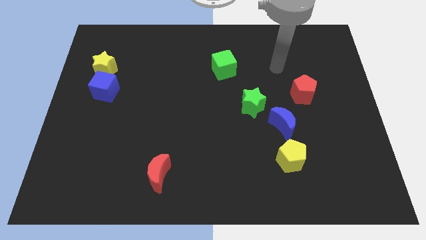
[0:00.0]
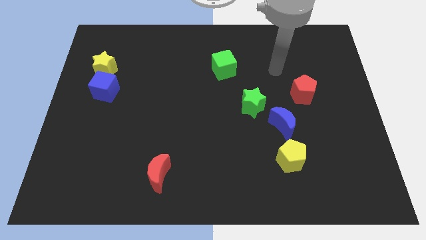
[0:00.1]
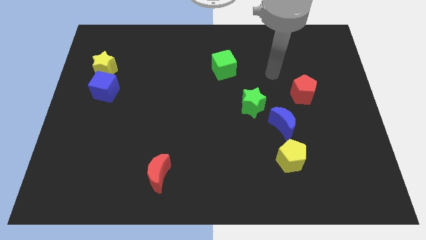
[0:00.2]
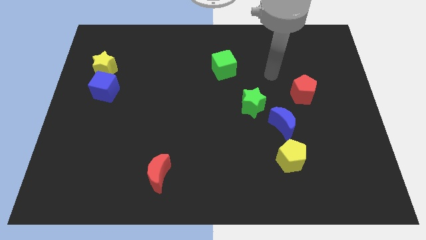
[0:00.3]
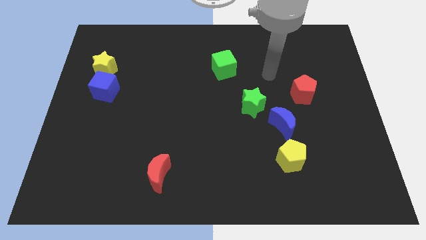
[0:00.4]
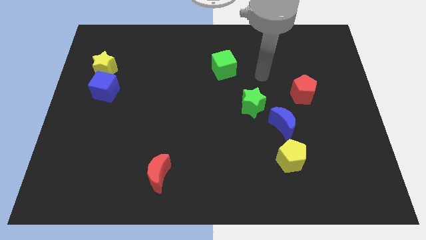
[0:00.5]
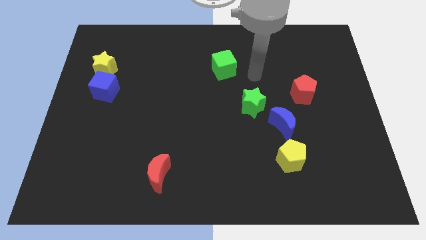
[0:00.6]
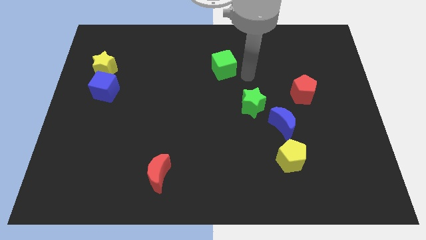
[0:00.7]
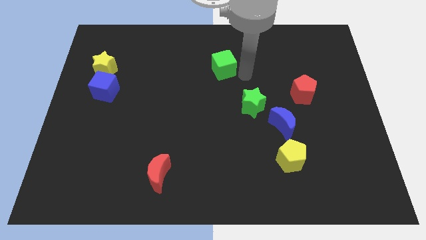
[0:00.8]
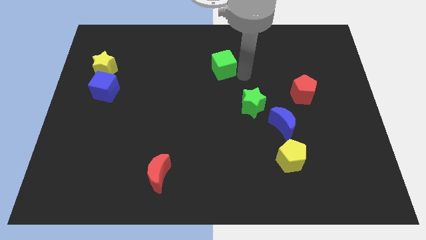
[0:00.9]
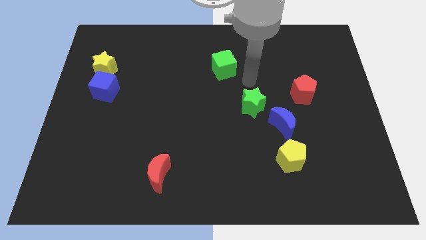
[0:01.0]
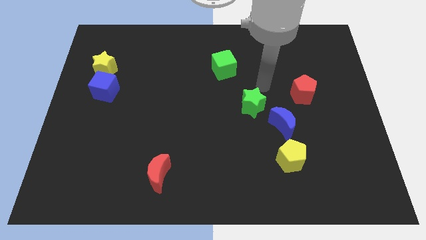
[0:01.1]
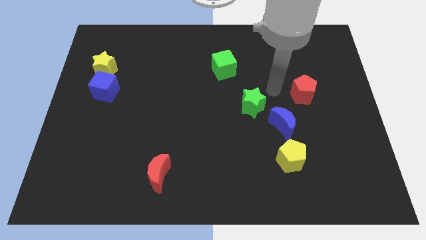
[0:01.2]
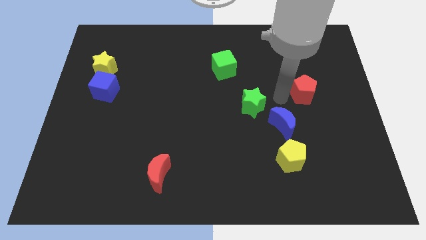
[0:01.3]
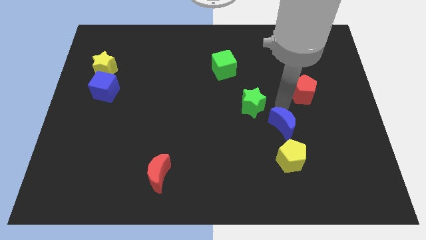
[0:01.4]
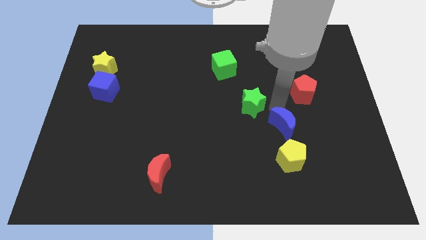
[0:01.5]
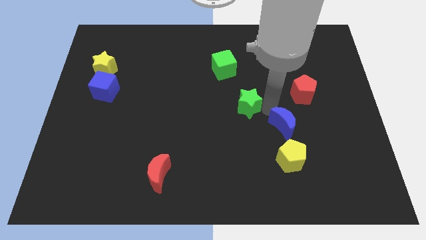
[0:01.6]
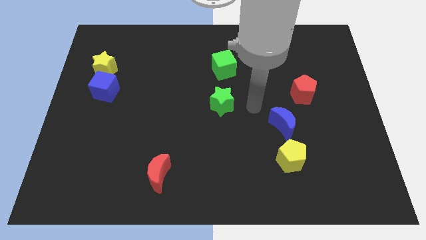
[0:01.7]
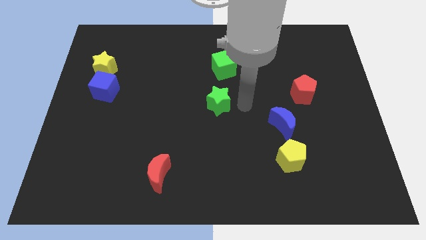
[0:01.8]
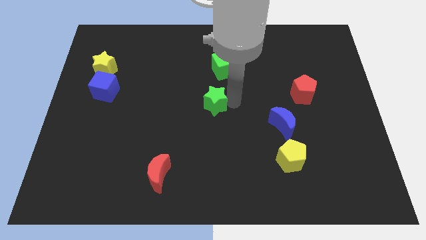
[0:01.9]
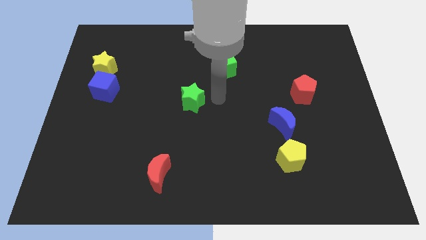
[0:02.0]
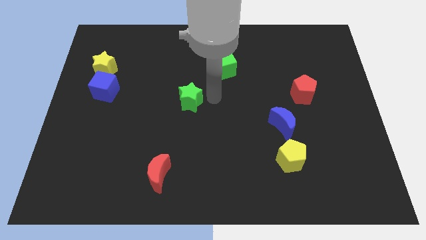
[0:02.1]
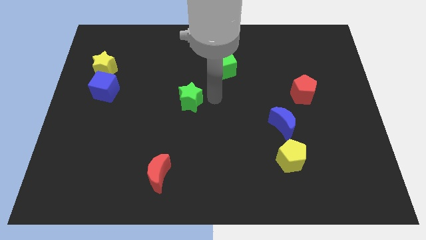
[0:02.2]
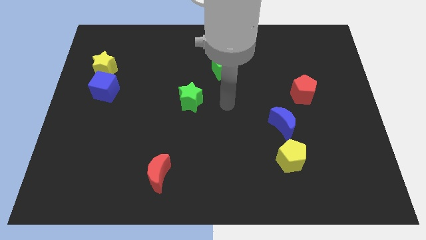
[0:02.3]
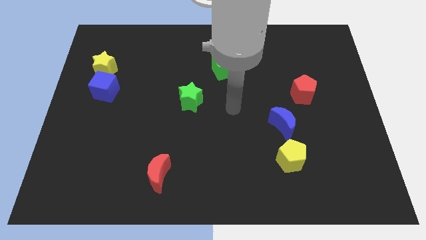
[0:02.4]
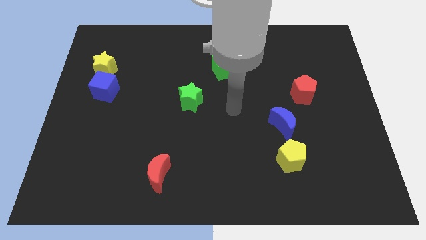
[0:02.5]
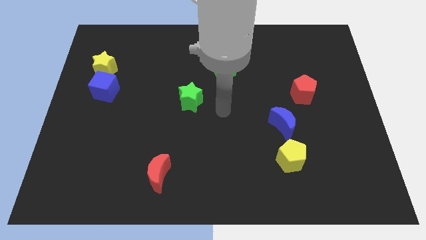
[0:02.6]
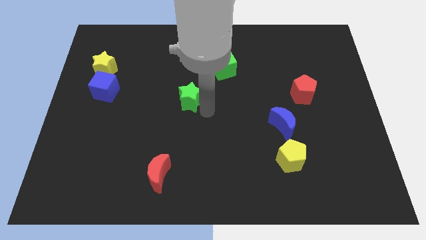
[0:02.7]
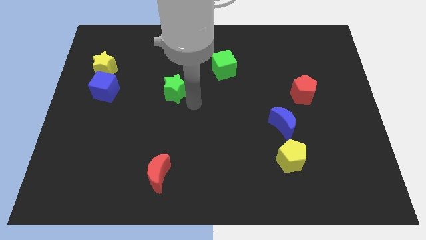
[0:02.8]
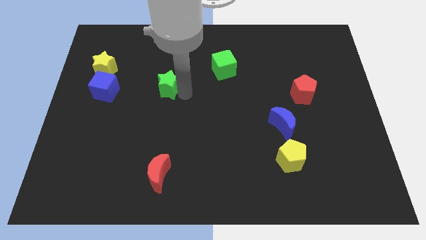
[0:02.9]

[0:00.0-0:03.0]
move the green star horizontally right to the blue cube

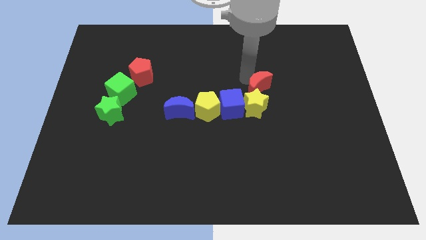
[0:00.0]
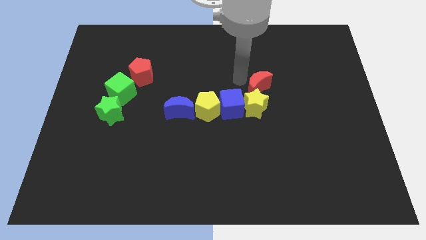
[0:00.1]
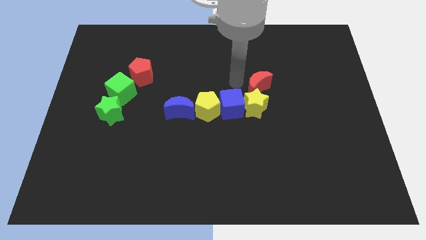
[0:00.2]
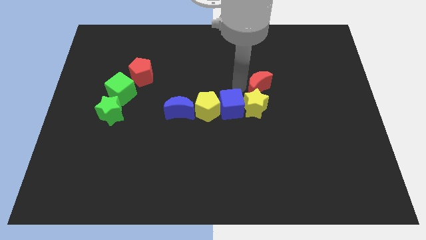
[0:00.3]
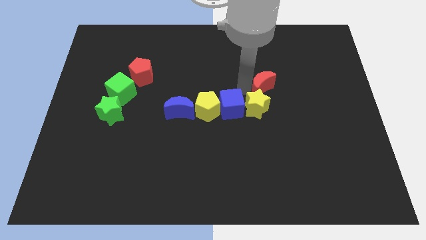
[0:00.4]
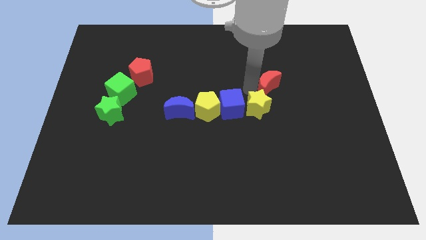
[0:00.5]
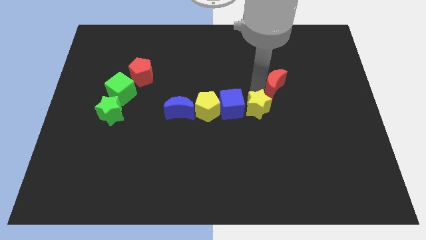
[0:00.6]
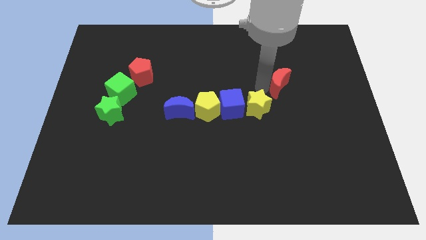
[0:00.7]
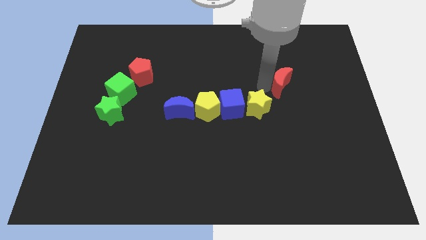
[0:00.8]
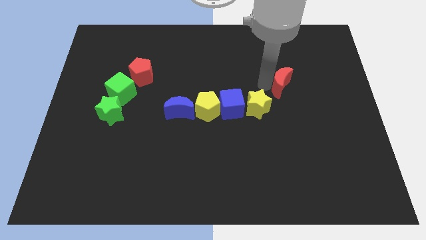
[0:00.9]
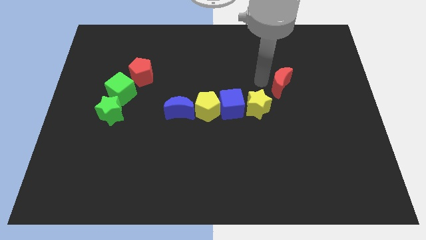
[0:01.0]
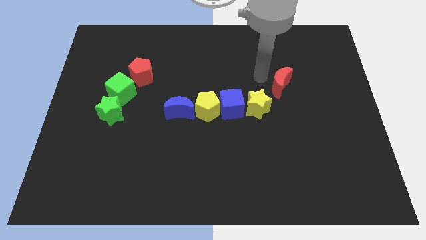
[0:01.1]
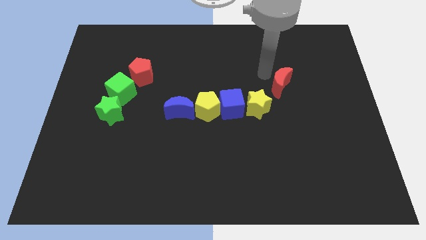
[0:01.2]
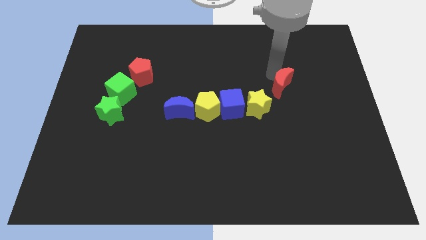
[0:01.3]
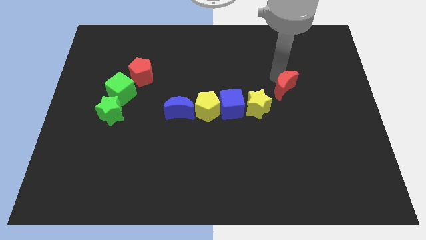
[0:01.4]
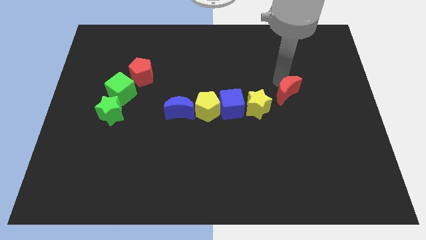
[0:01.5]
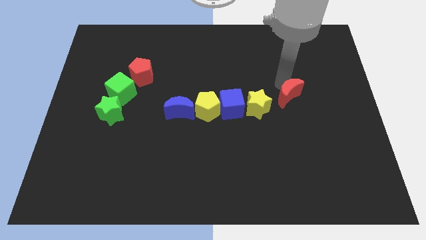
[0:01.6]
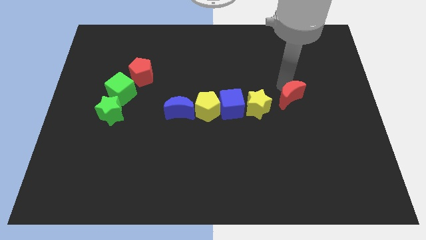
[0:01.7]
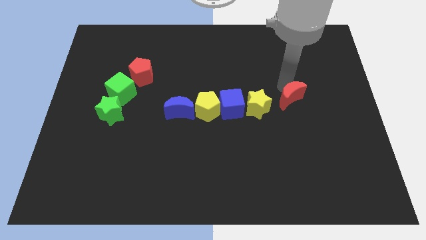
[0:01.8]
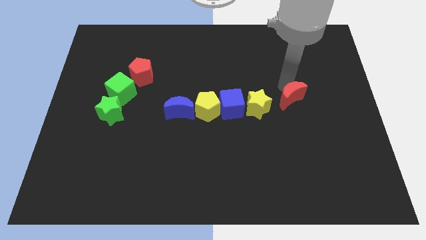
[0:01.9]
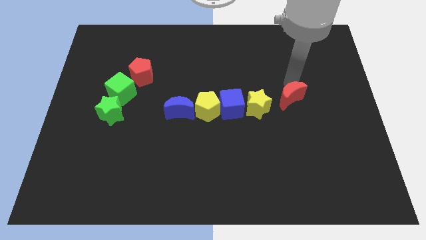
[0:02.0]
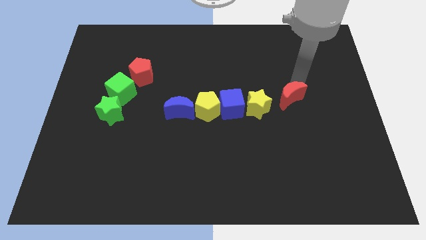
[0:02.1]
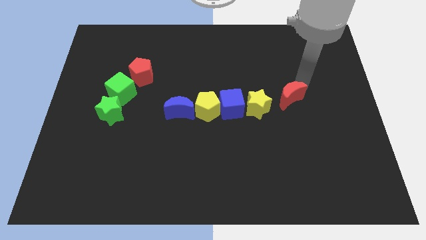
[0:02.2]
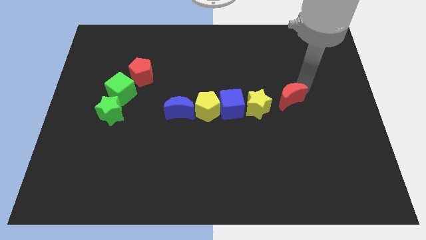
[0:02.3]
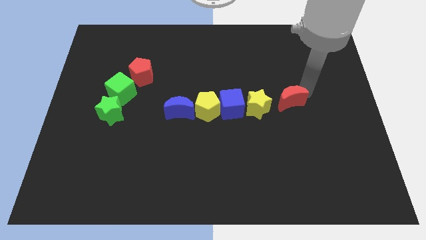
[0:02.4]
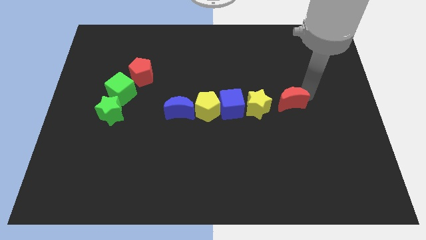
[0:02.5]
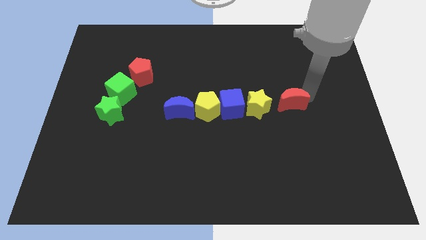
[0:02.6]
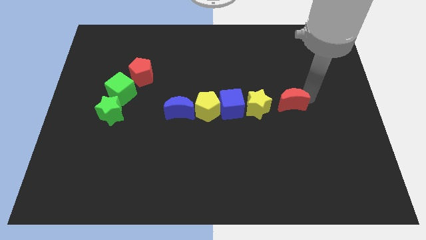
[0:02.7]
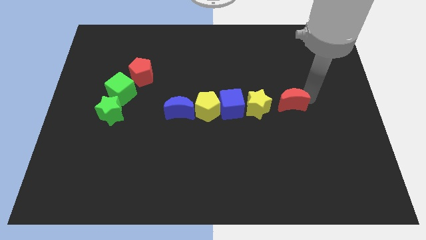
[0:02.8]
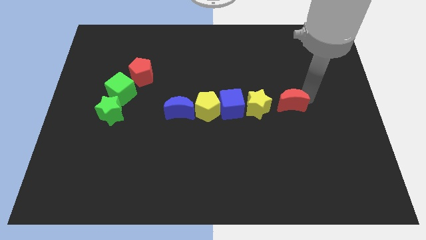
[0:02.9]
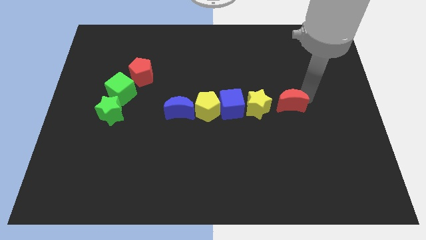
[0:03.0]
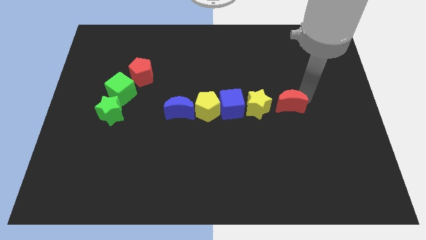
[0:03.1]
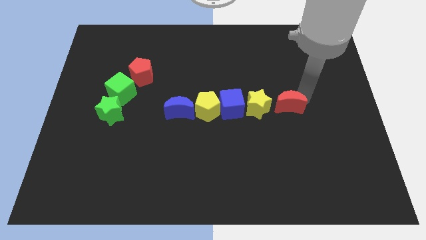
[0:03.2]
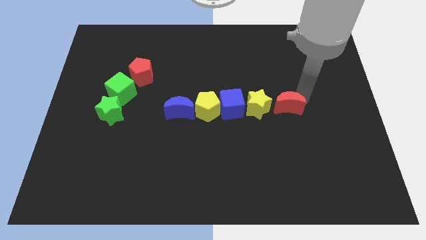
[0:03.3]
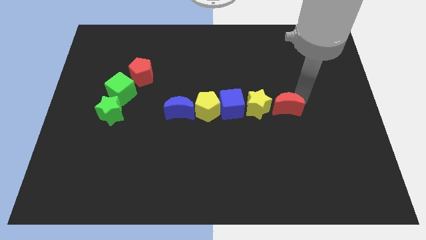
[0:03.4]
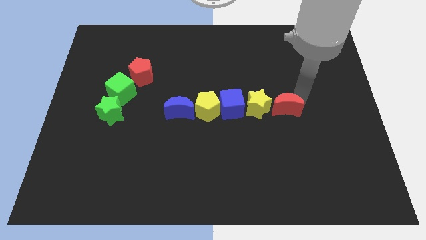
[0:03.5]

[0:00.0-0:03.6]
move red crescent to the right of yellow star

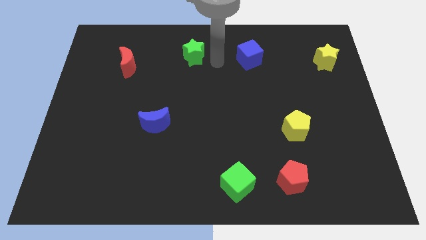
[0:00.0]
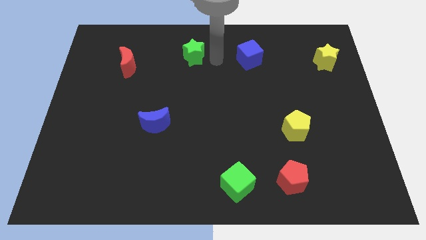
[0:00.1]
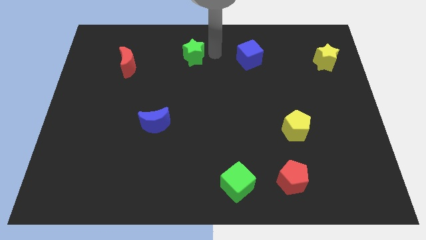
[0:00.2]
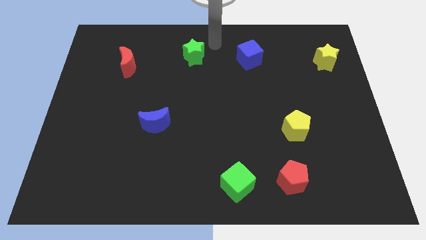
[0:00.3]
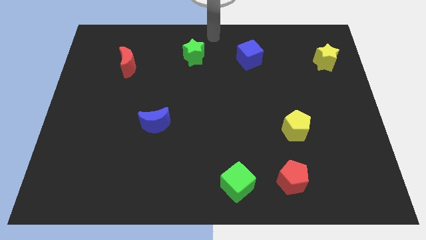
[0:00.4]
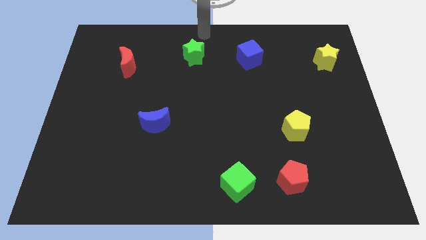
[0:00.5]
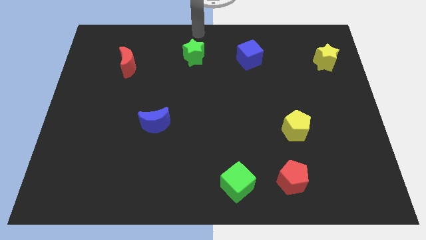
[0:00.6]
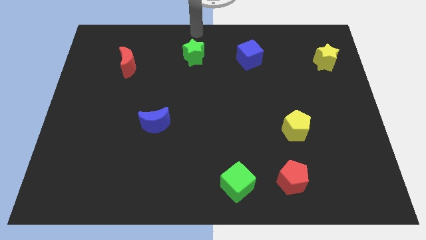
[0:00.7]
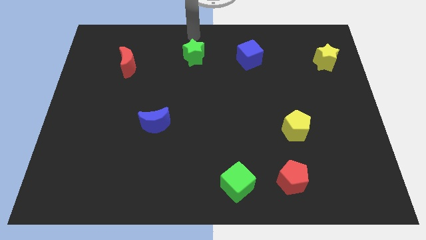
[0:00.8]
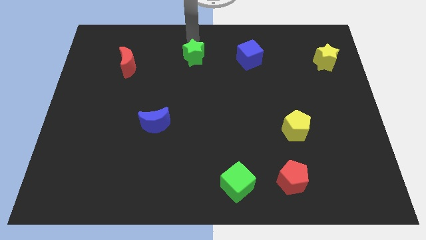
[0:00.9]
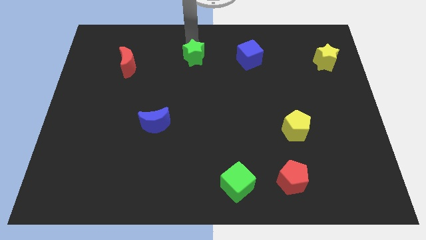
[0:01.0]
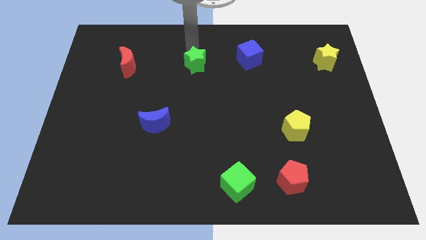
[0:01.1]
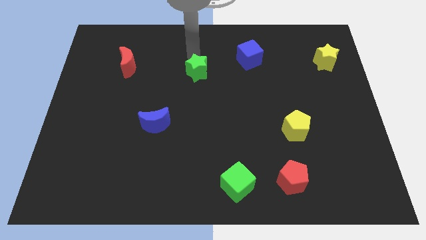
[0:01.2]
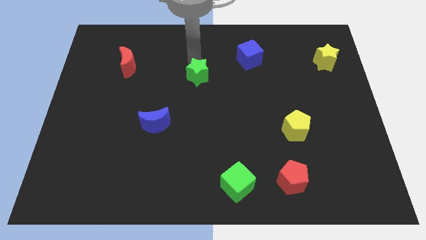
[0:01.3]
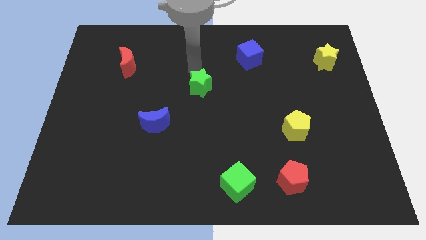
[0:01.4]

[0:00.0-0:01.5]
place the green star diagonally in between the blue cube and blue crescent

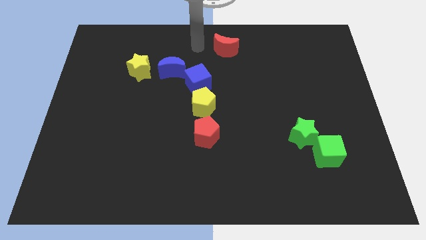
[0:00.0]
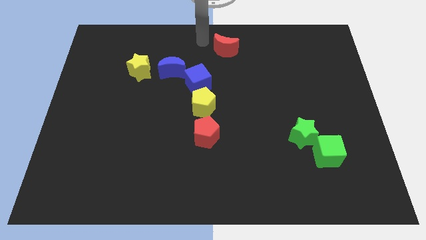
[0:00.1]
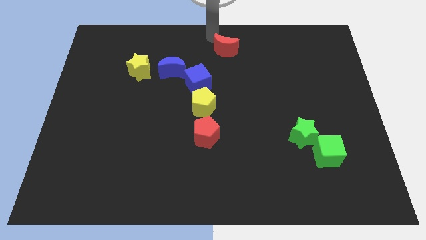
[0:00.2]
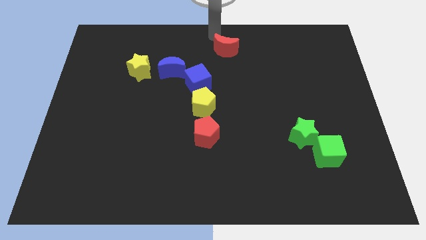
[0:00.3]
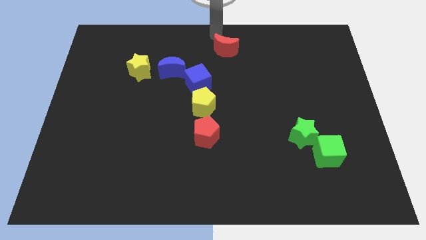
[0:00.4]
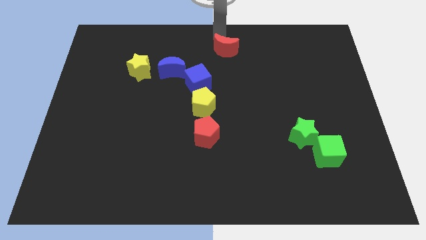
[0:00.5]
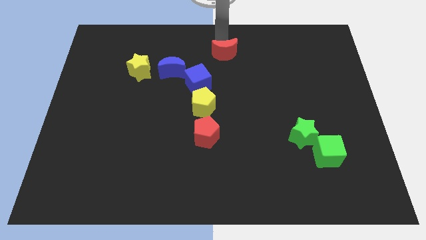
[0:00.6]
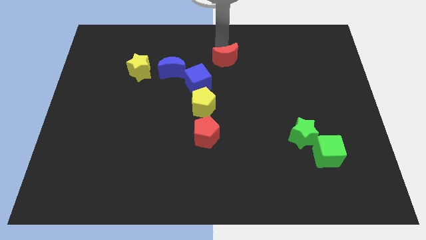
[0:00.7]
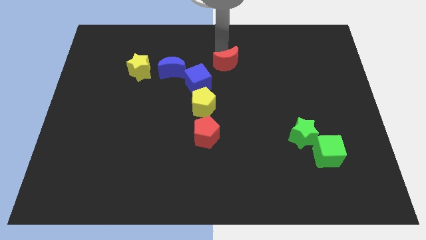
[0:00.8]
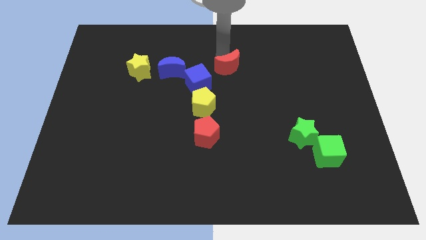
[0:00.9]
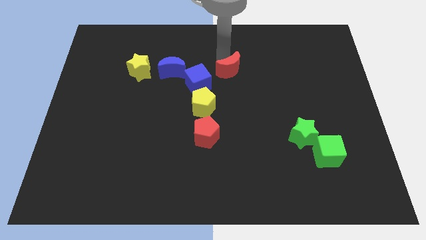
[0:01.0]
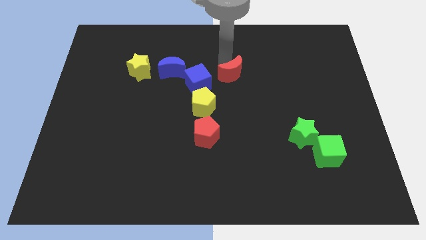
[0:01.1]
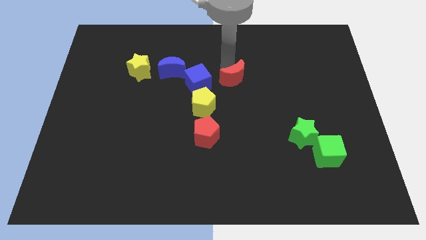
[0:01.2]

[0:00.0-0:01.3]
push the red crescent to the right of the blue cube
